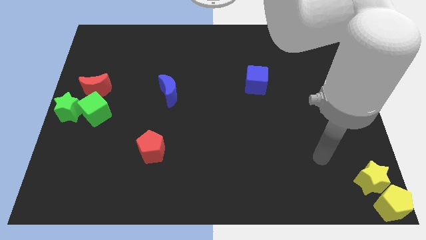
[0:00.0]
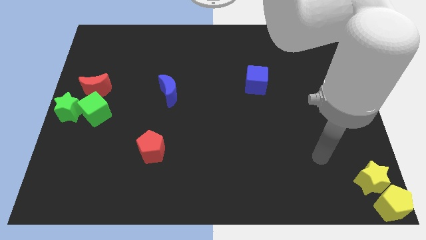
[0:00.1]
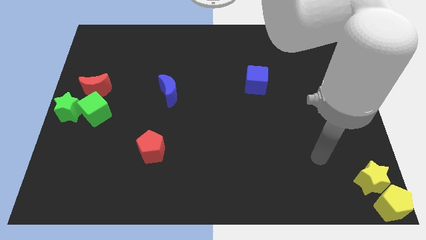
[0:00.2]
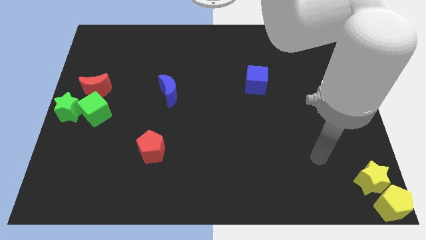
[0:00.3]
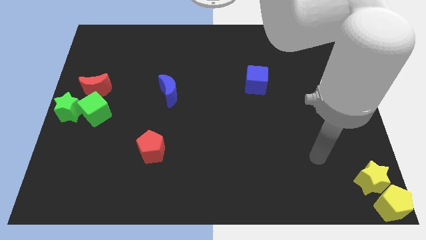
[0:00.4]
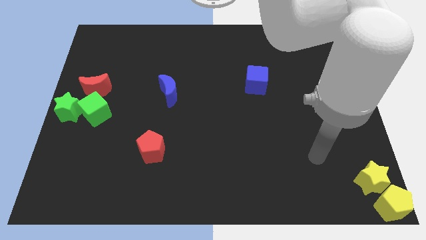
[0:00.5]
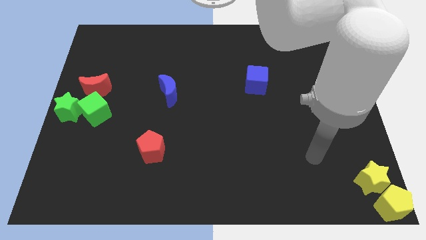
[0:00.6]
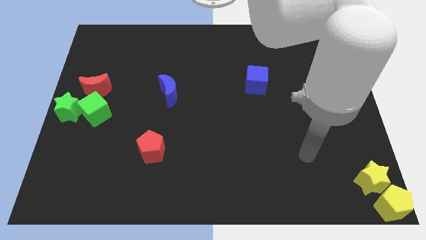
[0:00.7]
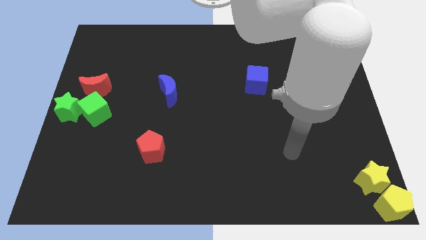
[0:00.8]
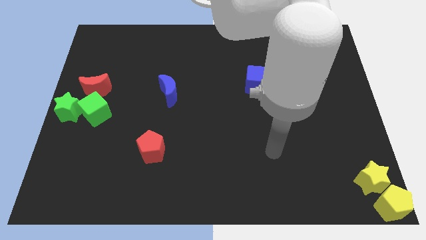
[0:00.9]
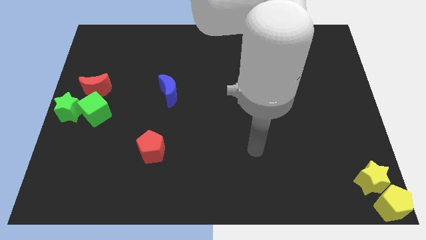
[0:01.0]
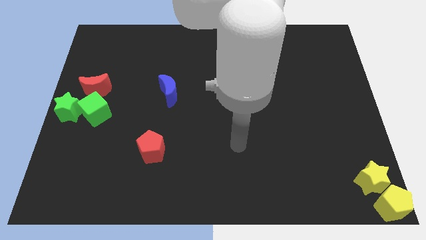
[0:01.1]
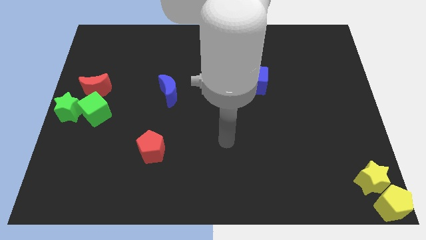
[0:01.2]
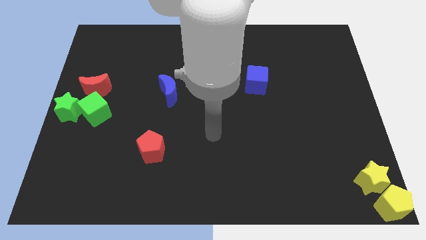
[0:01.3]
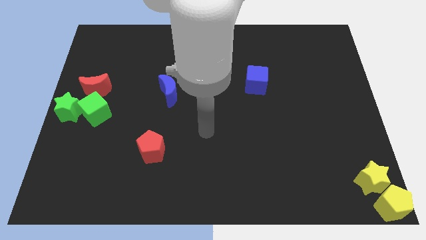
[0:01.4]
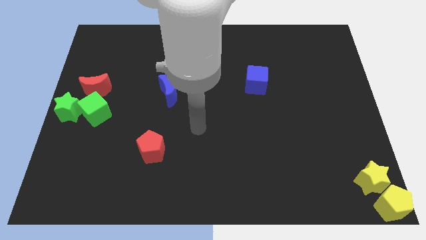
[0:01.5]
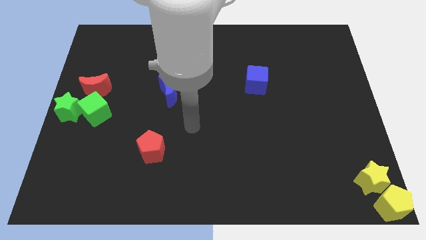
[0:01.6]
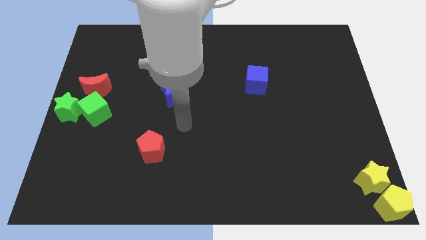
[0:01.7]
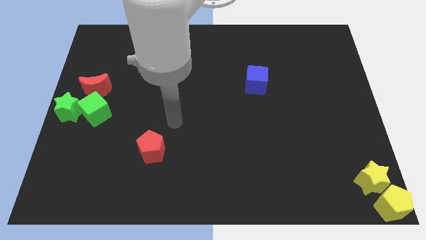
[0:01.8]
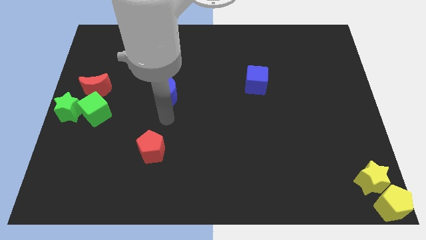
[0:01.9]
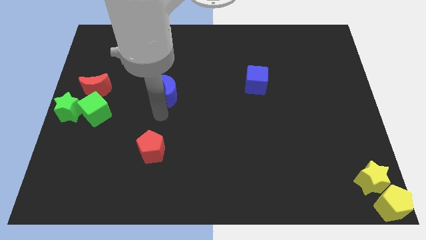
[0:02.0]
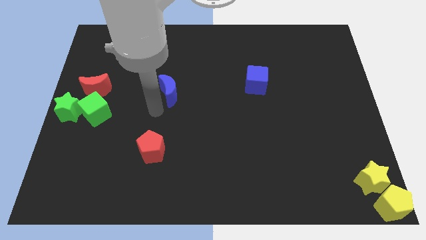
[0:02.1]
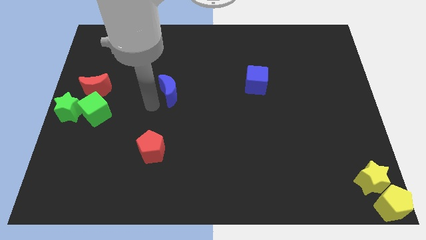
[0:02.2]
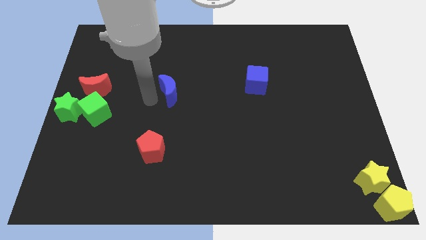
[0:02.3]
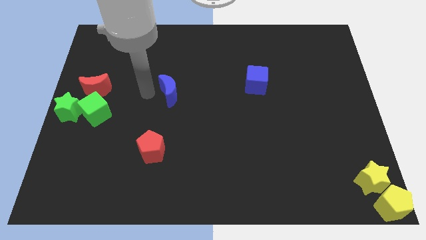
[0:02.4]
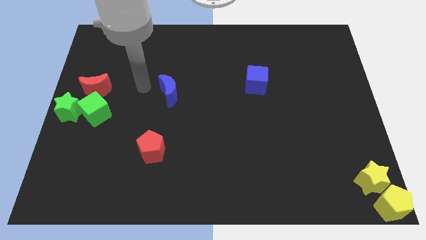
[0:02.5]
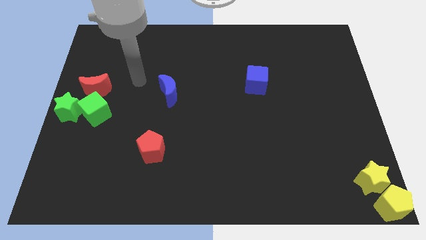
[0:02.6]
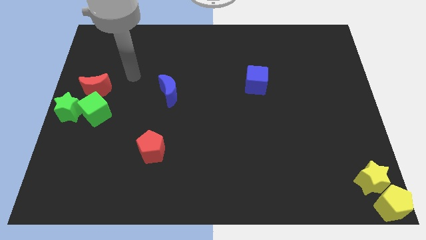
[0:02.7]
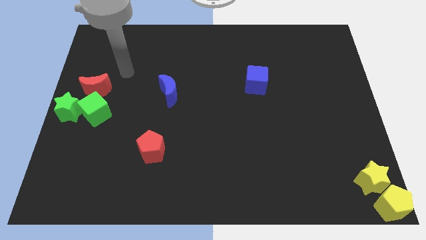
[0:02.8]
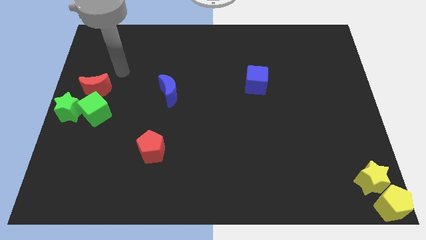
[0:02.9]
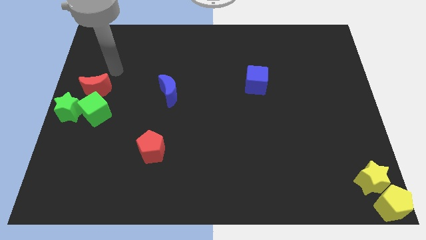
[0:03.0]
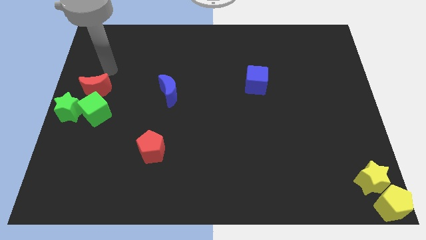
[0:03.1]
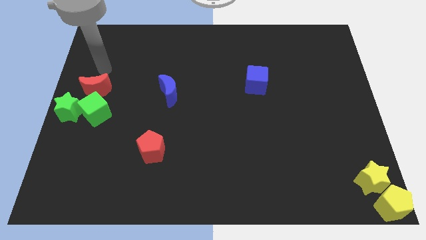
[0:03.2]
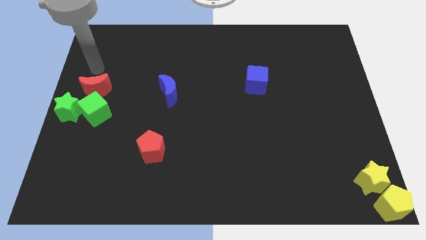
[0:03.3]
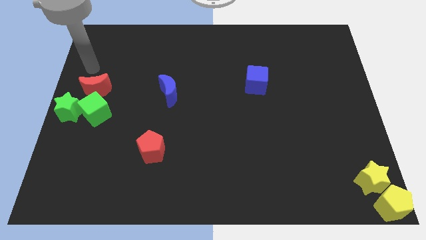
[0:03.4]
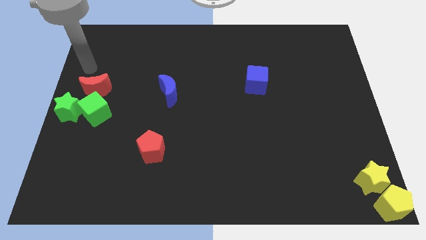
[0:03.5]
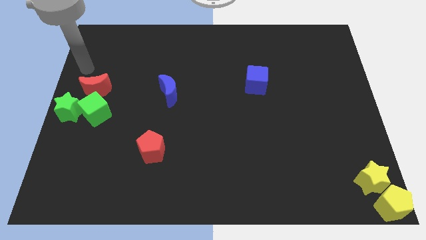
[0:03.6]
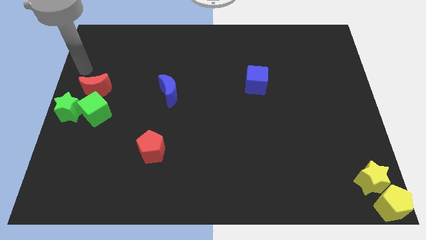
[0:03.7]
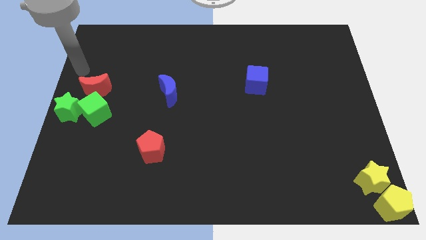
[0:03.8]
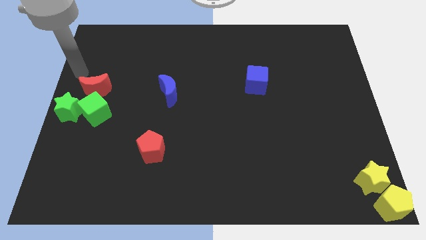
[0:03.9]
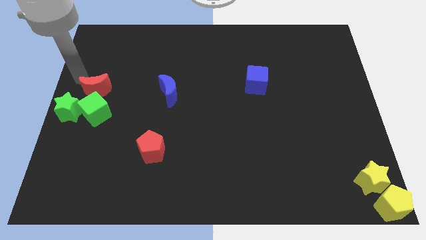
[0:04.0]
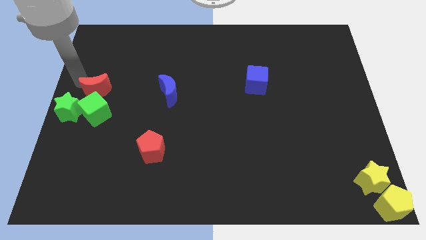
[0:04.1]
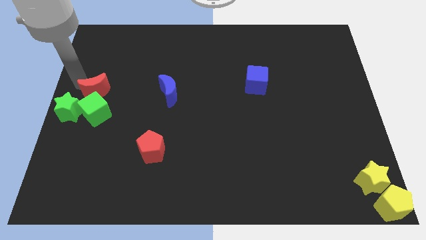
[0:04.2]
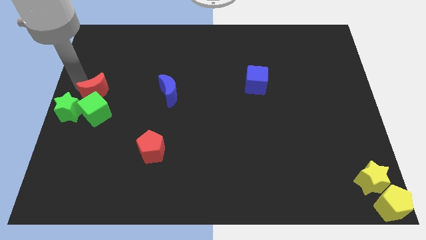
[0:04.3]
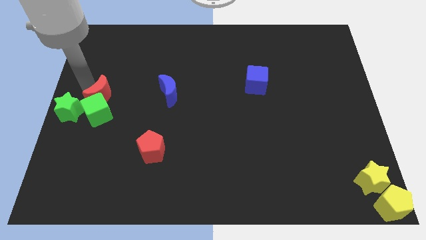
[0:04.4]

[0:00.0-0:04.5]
push the red moon slightly into the top side of the green cube

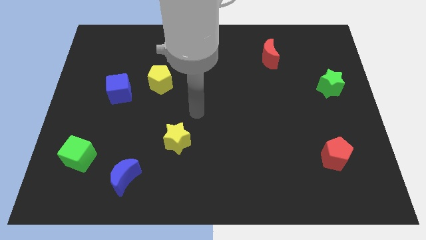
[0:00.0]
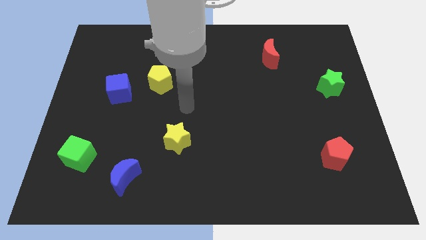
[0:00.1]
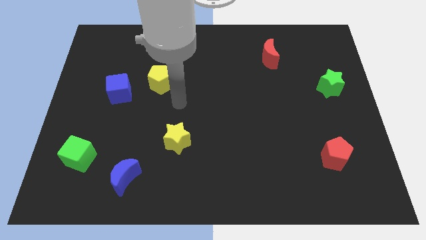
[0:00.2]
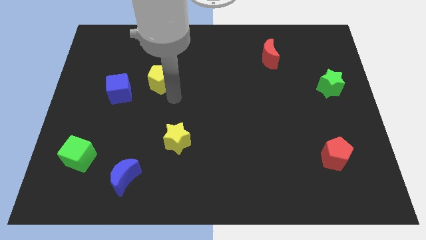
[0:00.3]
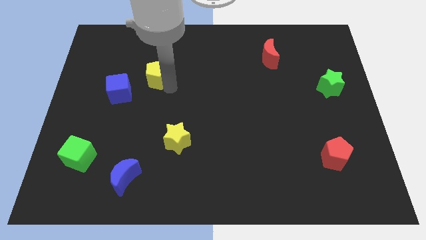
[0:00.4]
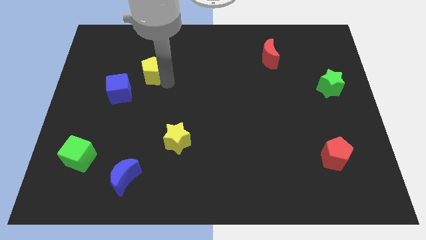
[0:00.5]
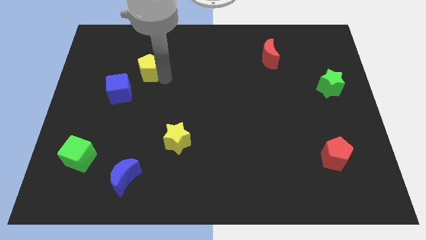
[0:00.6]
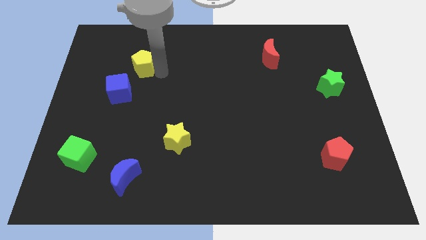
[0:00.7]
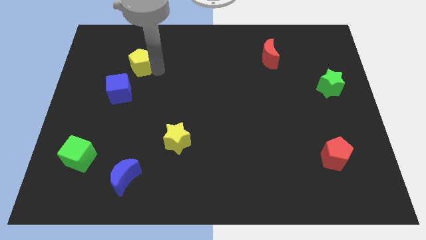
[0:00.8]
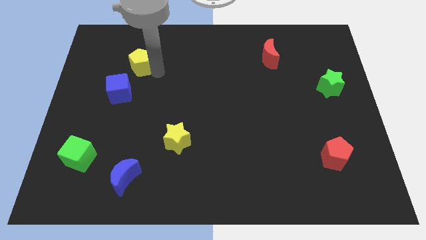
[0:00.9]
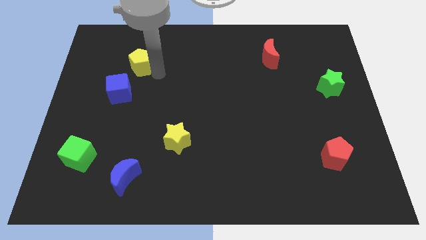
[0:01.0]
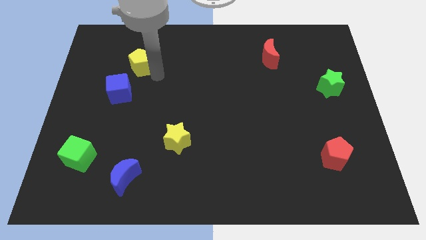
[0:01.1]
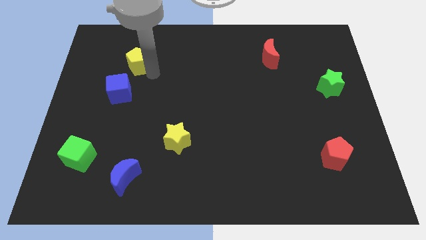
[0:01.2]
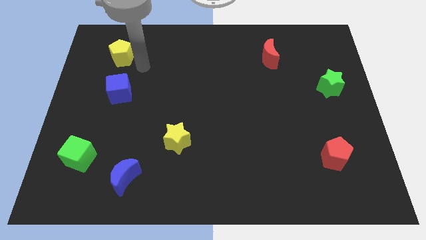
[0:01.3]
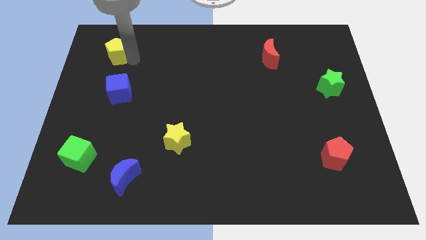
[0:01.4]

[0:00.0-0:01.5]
push yellow star above blue cube

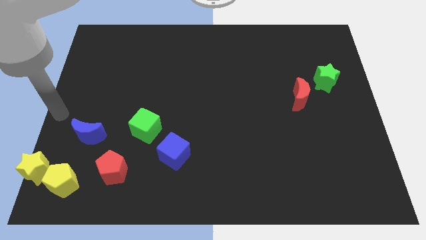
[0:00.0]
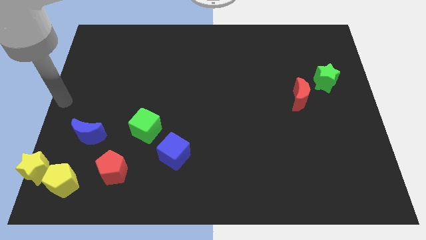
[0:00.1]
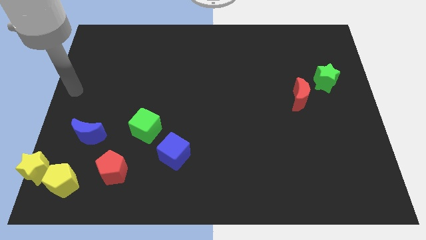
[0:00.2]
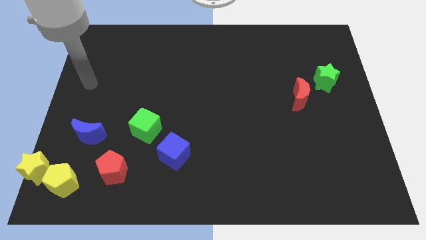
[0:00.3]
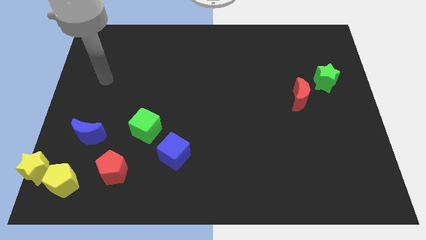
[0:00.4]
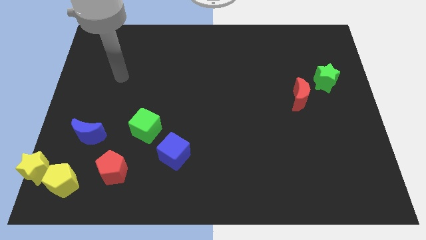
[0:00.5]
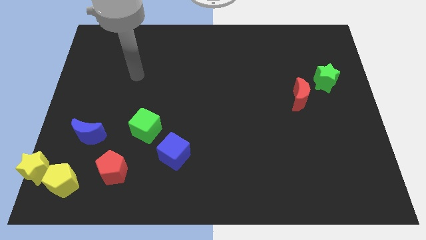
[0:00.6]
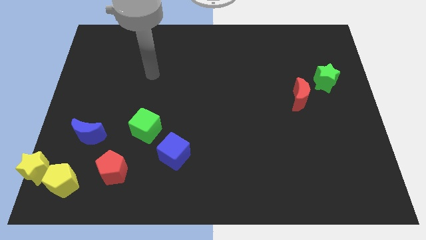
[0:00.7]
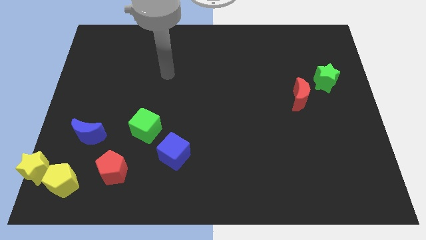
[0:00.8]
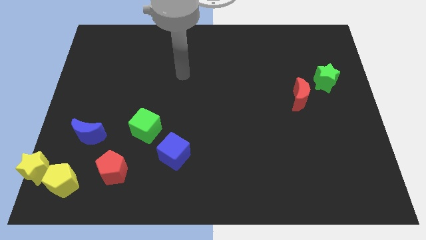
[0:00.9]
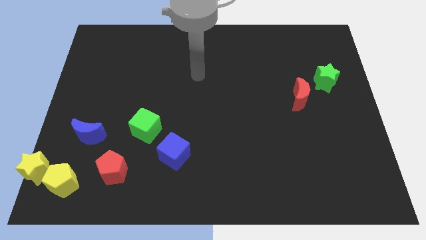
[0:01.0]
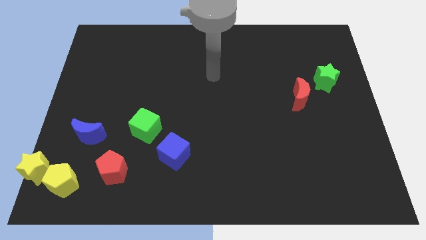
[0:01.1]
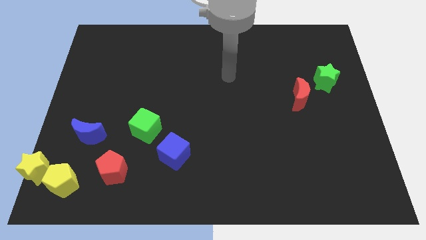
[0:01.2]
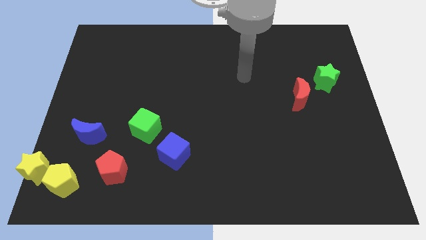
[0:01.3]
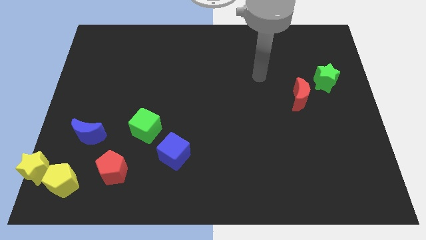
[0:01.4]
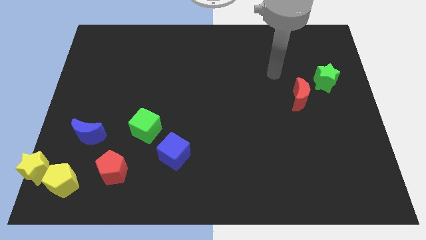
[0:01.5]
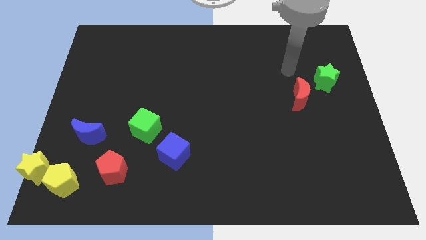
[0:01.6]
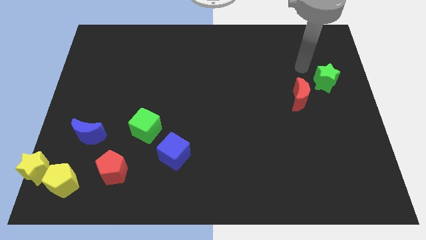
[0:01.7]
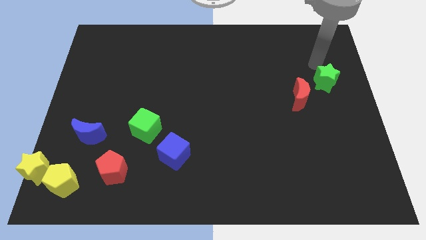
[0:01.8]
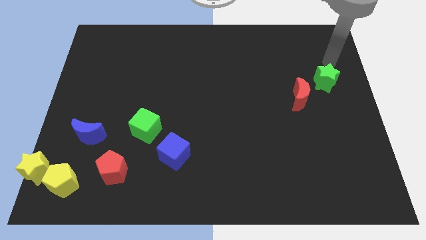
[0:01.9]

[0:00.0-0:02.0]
point the arm above the green star

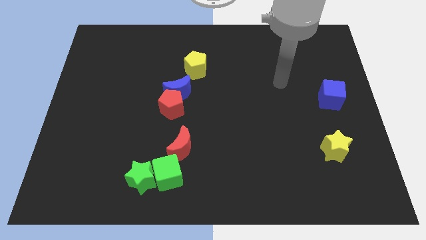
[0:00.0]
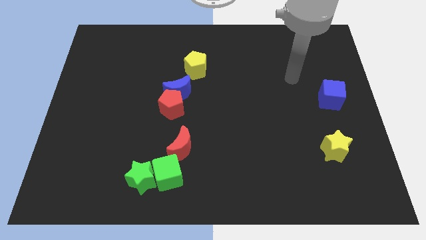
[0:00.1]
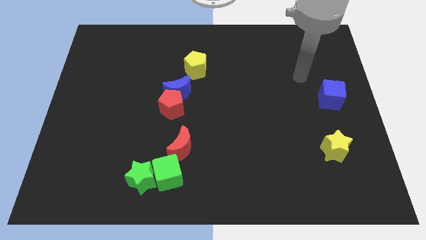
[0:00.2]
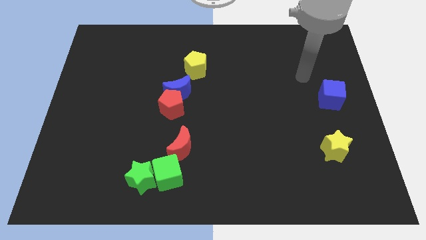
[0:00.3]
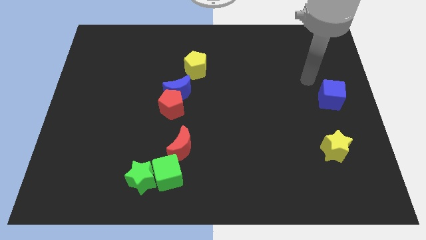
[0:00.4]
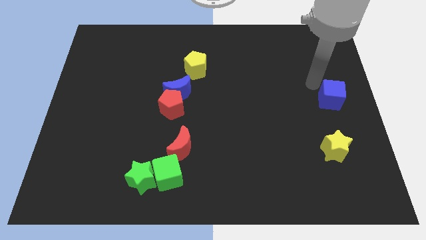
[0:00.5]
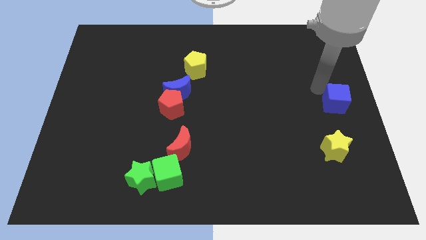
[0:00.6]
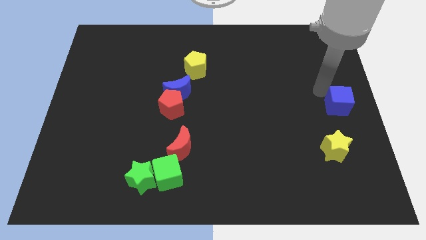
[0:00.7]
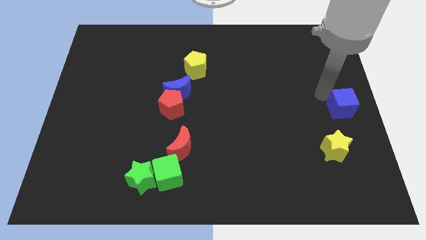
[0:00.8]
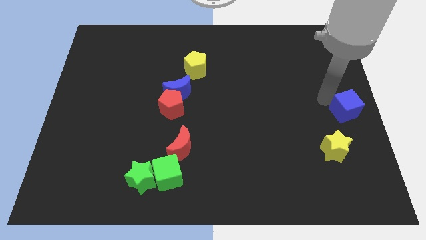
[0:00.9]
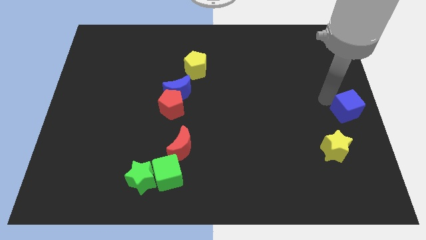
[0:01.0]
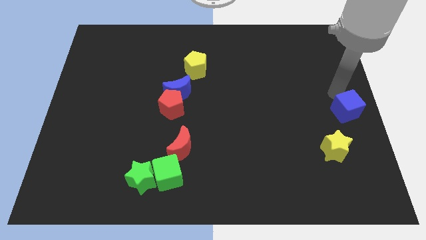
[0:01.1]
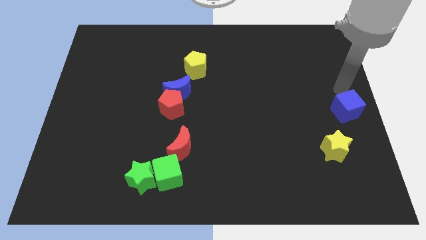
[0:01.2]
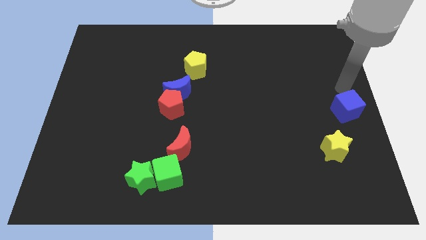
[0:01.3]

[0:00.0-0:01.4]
push the blue cube slightly to the bottom
